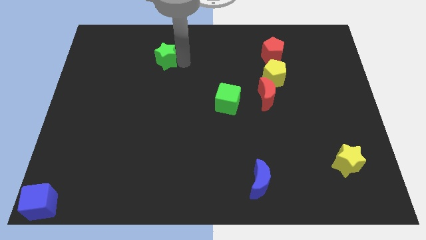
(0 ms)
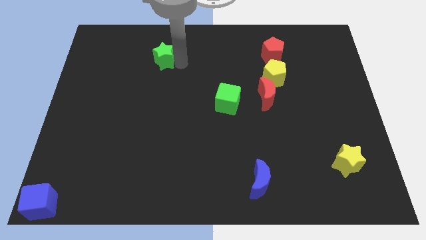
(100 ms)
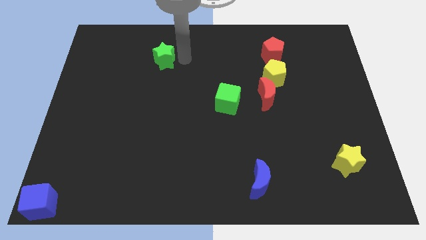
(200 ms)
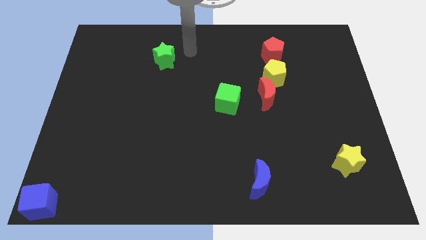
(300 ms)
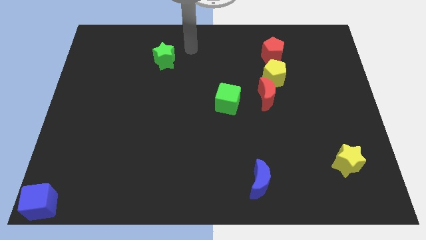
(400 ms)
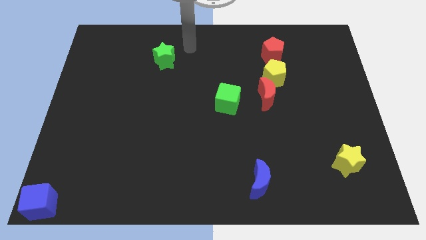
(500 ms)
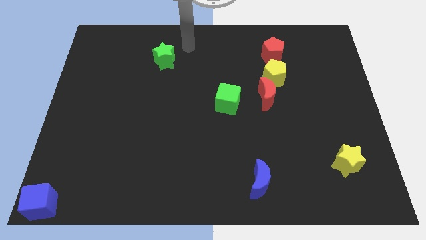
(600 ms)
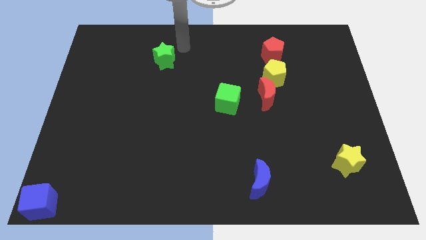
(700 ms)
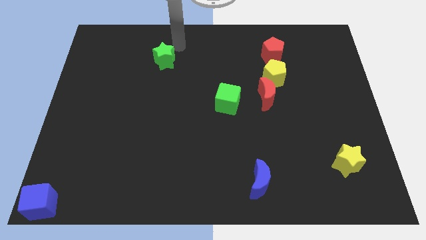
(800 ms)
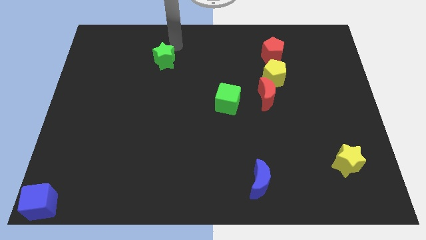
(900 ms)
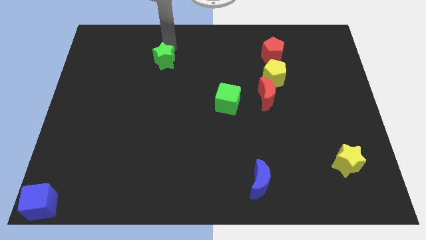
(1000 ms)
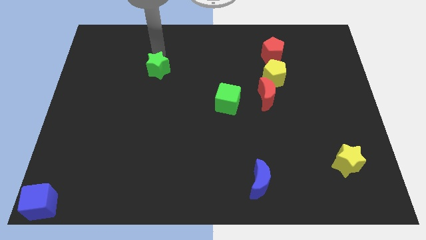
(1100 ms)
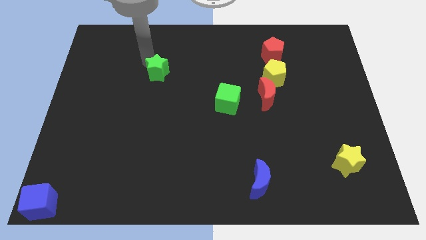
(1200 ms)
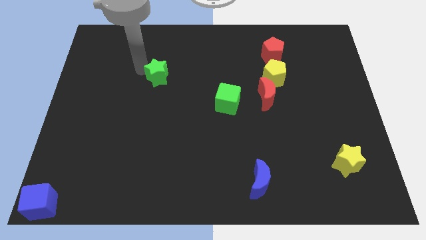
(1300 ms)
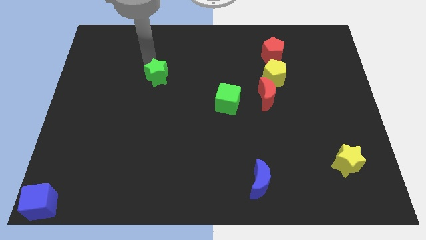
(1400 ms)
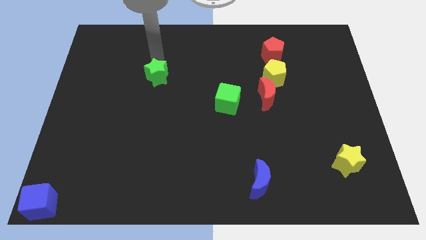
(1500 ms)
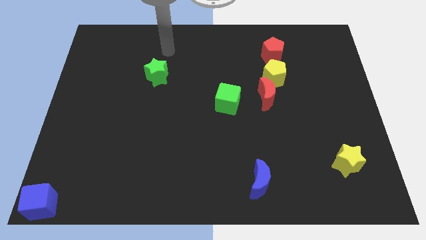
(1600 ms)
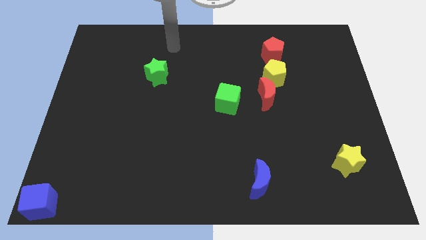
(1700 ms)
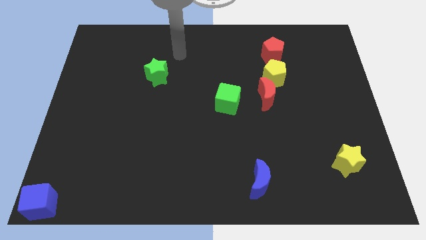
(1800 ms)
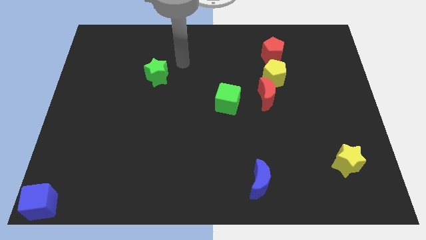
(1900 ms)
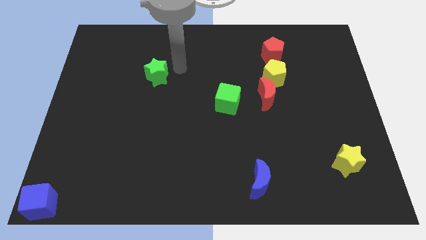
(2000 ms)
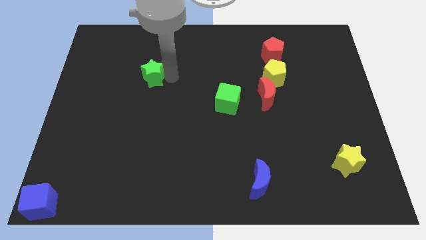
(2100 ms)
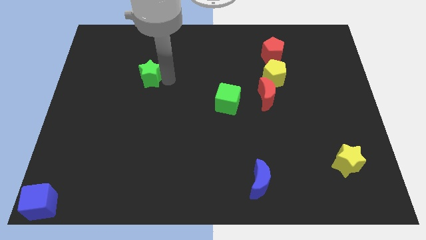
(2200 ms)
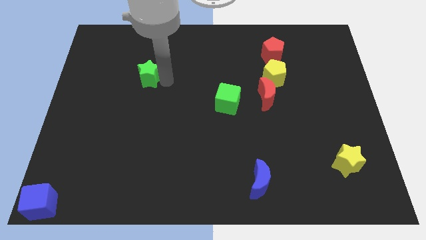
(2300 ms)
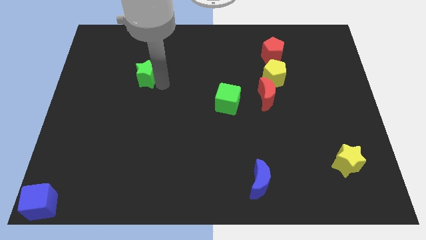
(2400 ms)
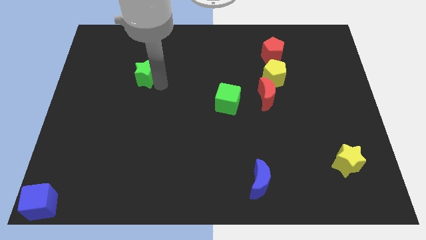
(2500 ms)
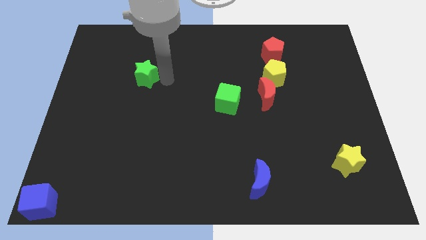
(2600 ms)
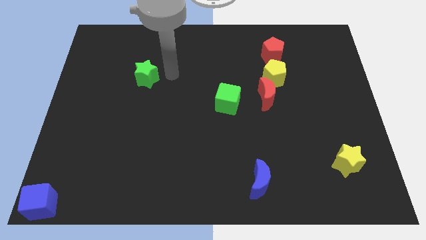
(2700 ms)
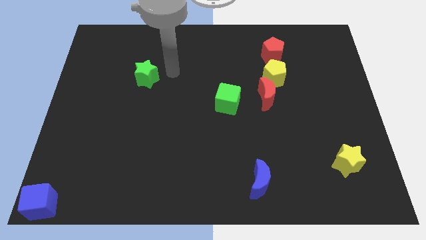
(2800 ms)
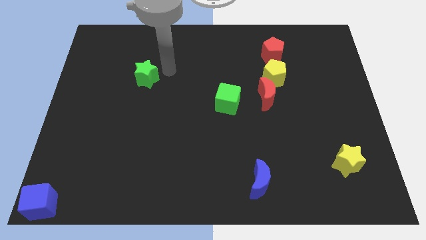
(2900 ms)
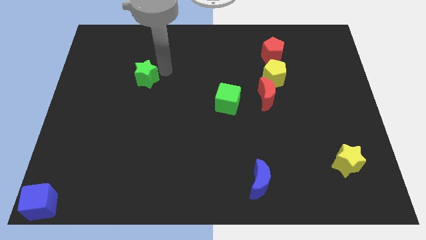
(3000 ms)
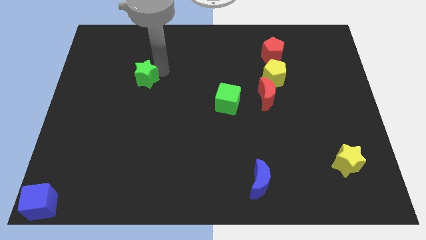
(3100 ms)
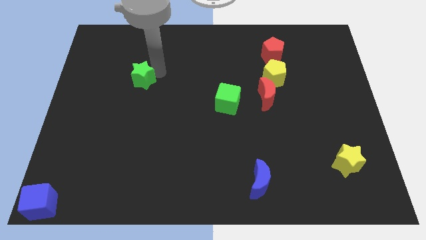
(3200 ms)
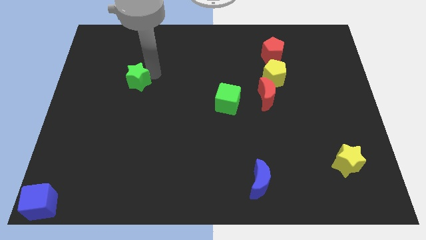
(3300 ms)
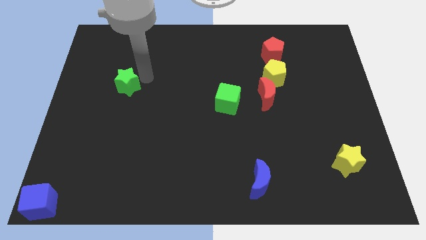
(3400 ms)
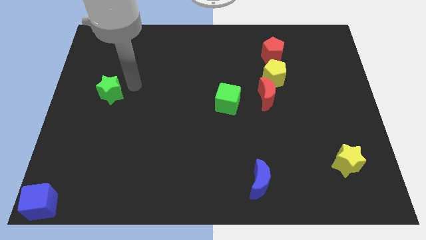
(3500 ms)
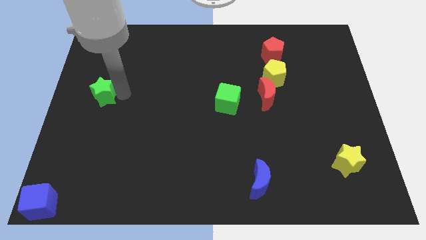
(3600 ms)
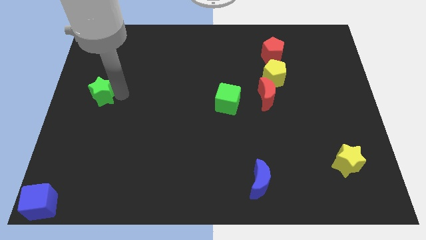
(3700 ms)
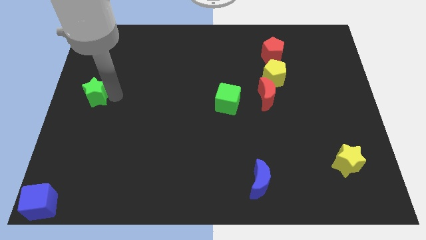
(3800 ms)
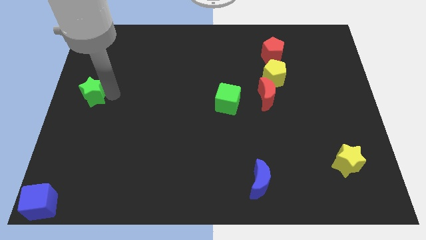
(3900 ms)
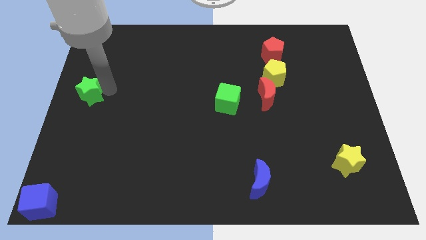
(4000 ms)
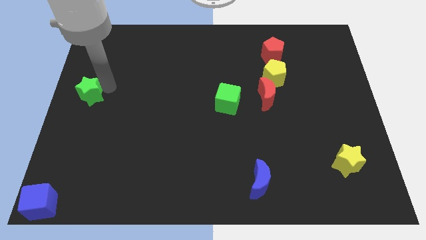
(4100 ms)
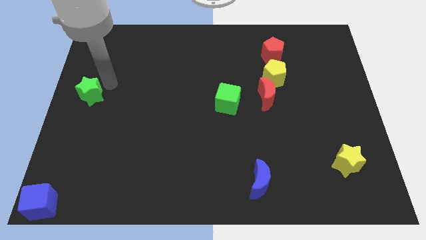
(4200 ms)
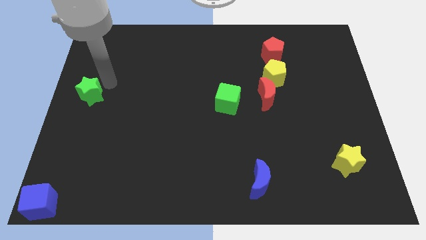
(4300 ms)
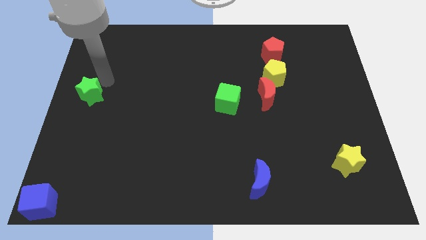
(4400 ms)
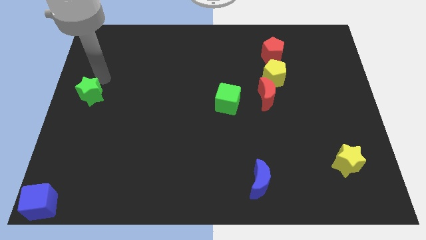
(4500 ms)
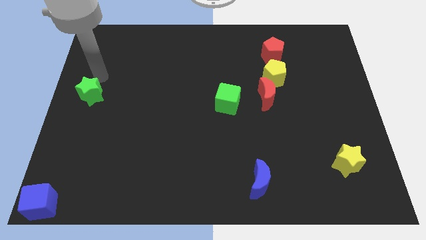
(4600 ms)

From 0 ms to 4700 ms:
move the green star to the left center

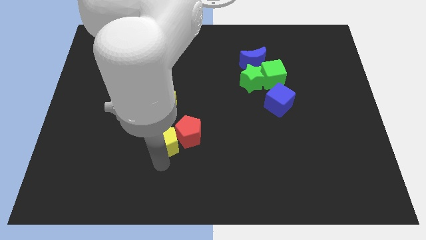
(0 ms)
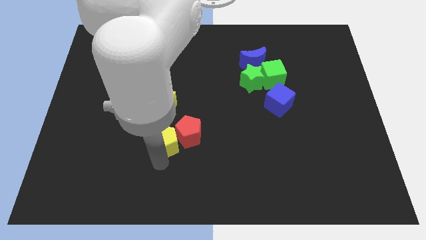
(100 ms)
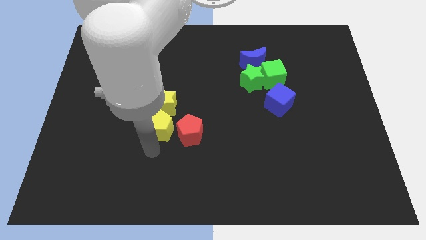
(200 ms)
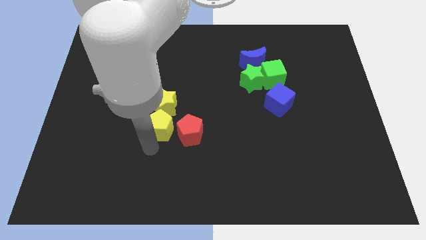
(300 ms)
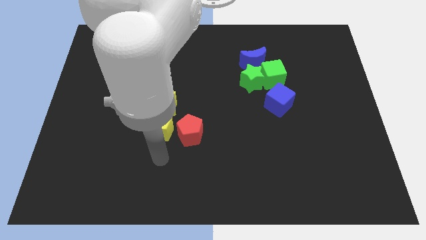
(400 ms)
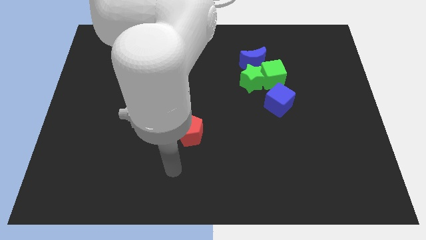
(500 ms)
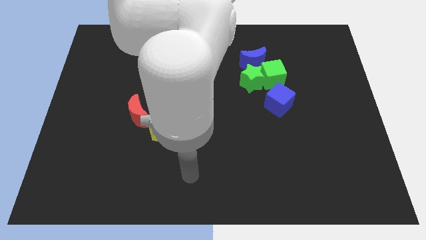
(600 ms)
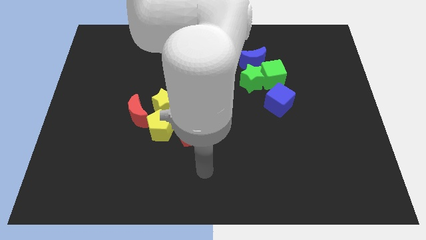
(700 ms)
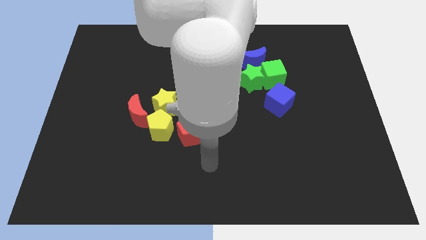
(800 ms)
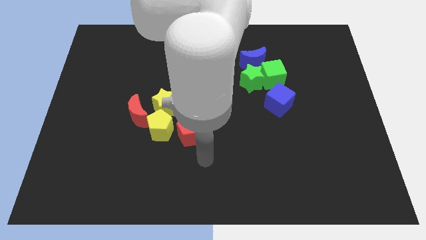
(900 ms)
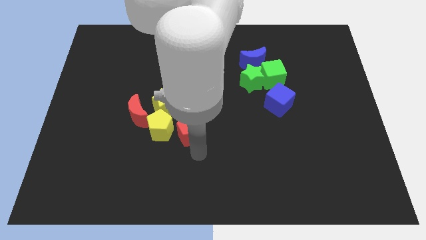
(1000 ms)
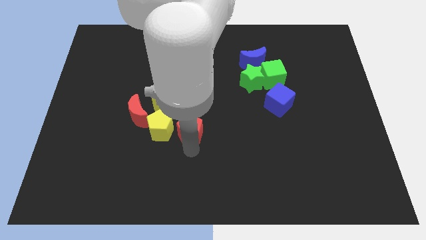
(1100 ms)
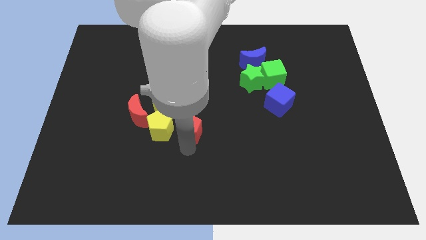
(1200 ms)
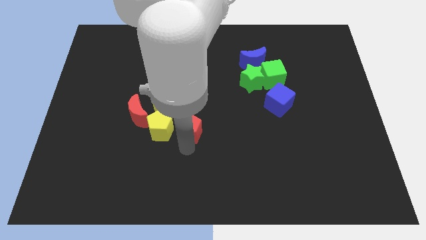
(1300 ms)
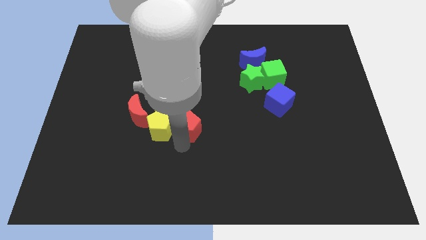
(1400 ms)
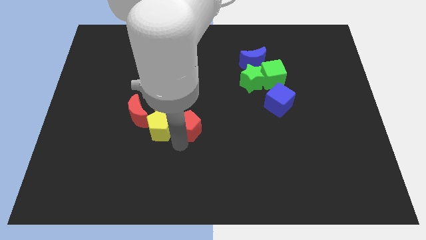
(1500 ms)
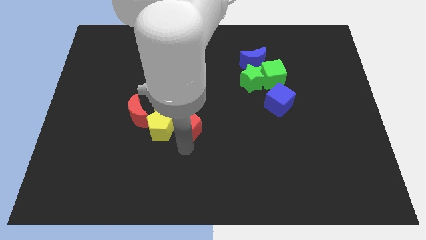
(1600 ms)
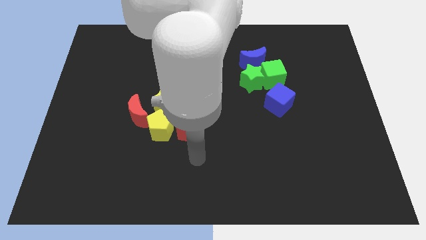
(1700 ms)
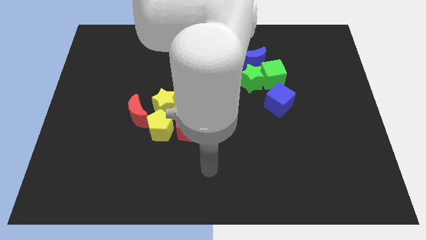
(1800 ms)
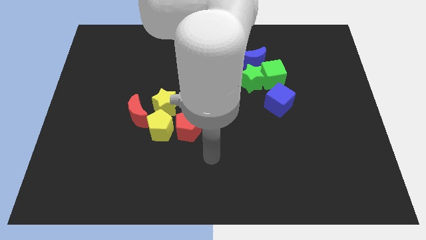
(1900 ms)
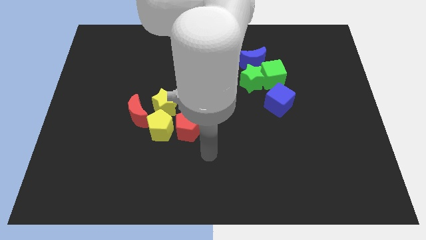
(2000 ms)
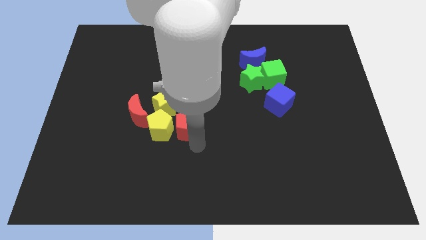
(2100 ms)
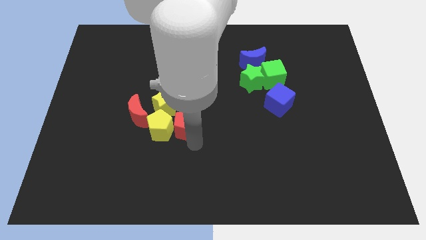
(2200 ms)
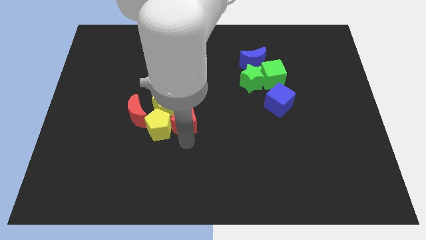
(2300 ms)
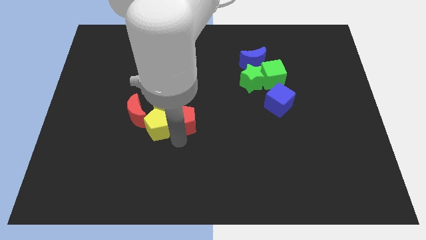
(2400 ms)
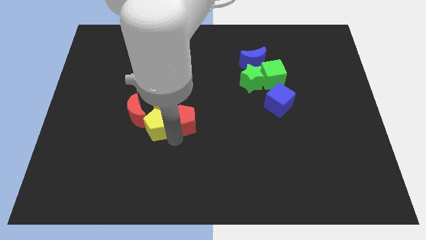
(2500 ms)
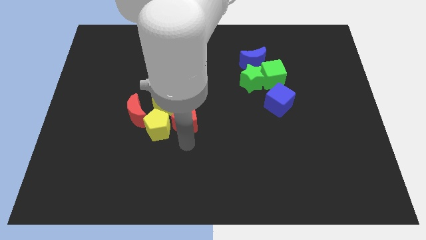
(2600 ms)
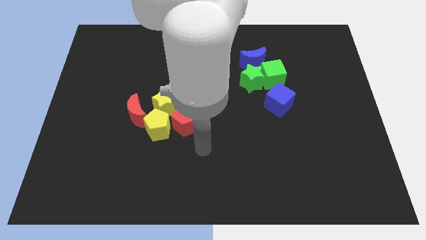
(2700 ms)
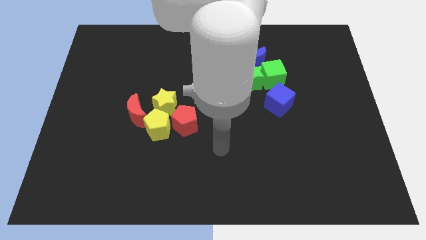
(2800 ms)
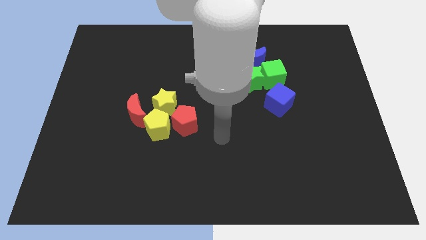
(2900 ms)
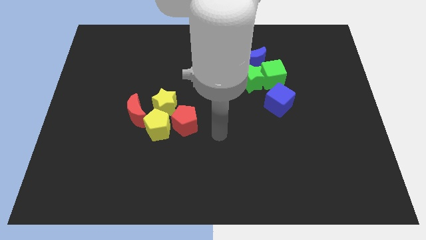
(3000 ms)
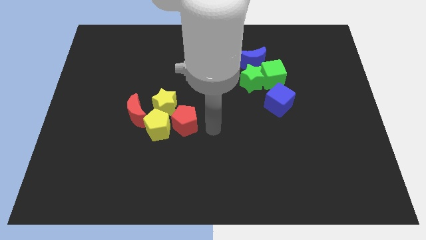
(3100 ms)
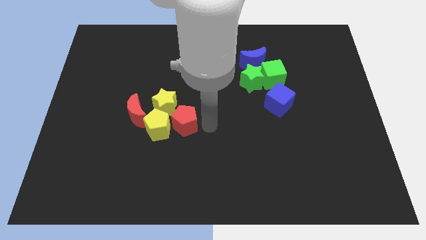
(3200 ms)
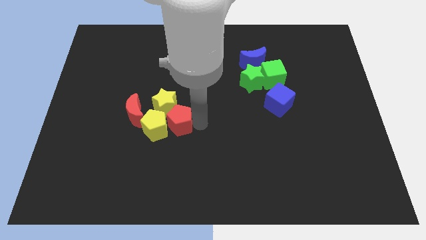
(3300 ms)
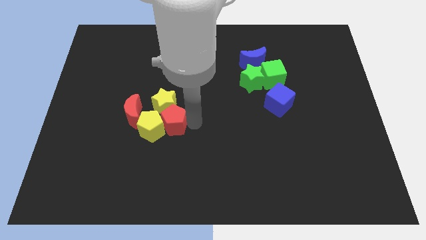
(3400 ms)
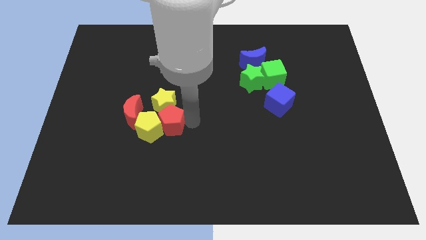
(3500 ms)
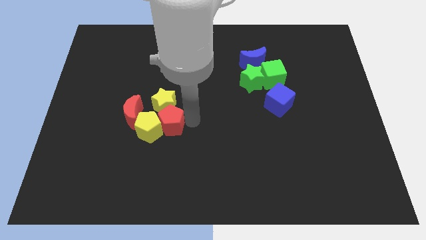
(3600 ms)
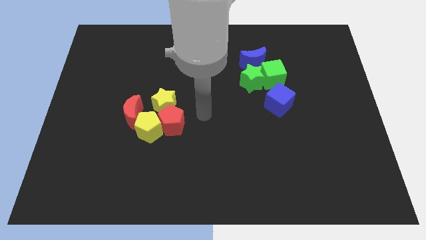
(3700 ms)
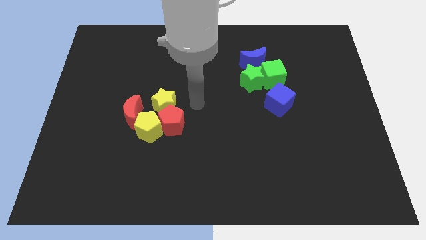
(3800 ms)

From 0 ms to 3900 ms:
slightly touch yellow pentagon red pentagon

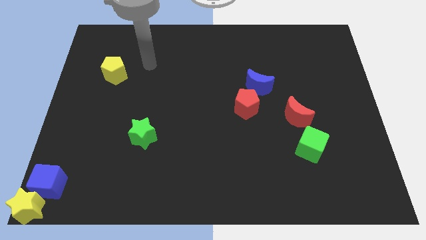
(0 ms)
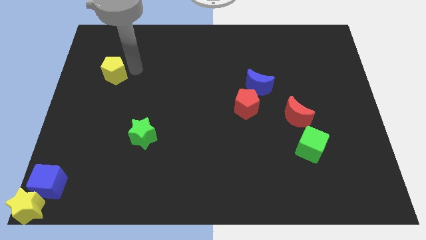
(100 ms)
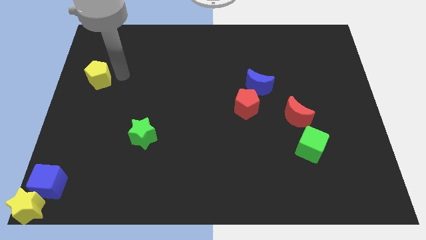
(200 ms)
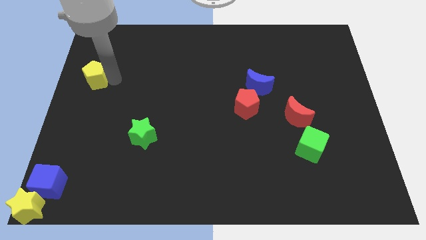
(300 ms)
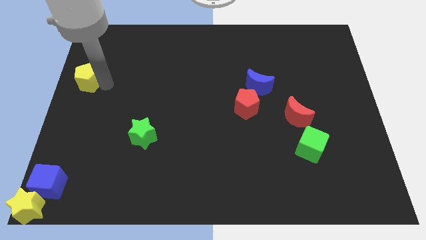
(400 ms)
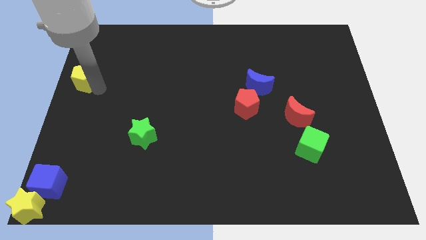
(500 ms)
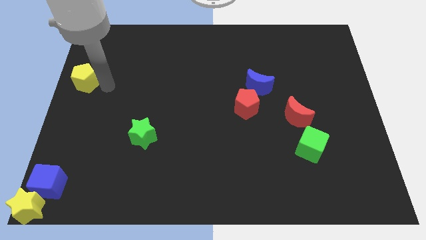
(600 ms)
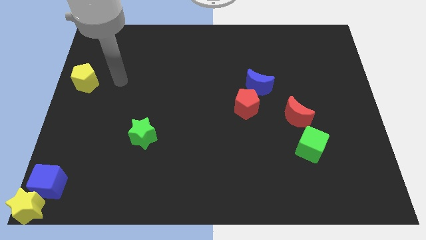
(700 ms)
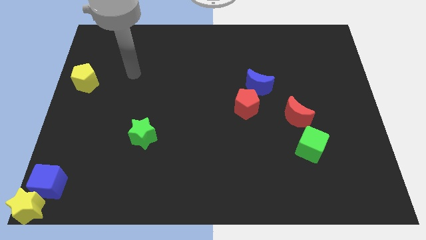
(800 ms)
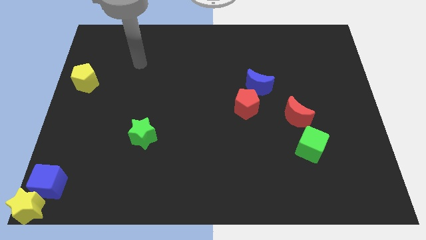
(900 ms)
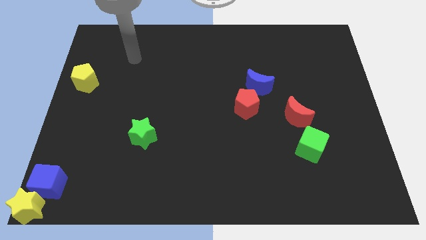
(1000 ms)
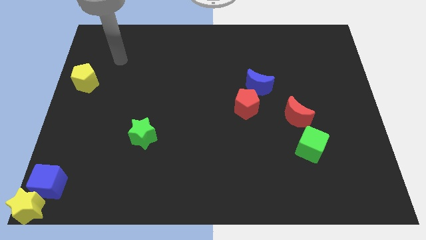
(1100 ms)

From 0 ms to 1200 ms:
move the yellow pentagon towards the center left of the board
